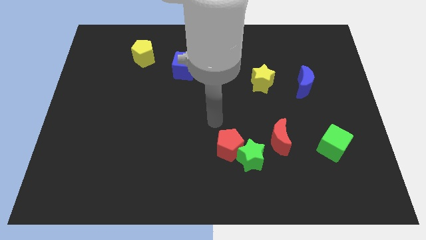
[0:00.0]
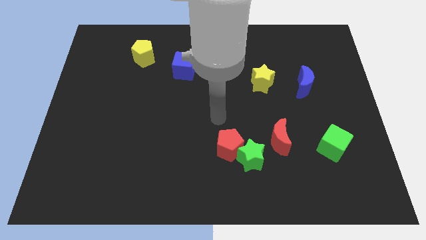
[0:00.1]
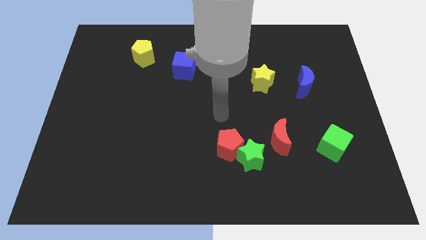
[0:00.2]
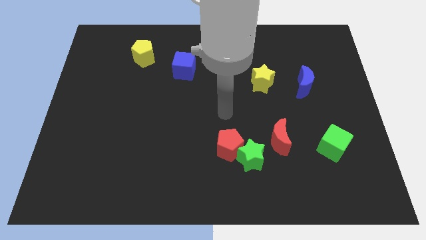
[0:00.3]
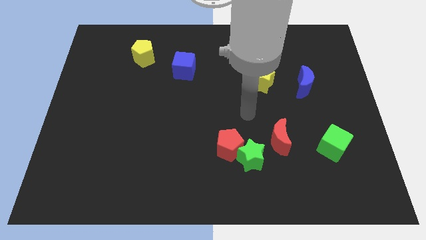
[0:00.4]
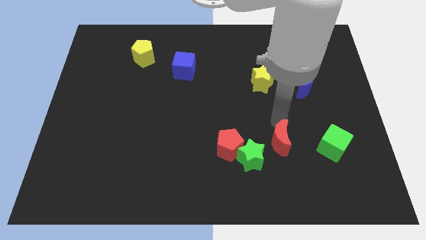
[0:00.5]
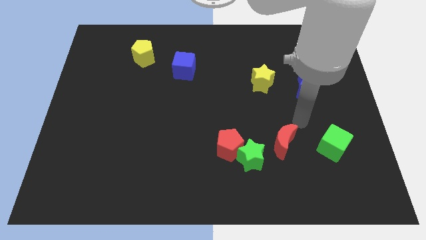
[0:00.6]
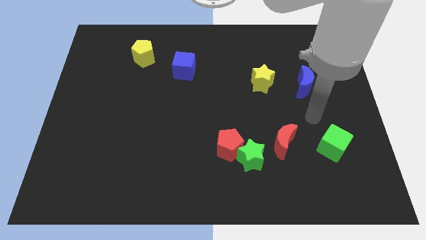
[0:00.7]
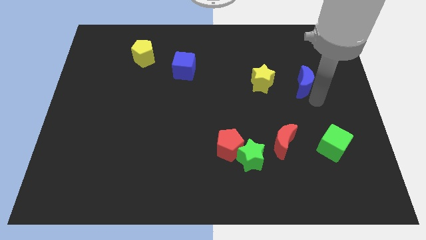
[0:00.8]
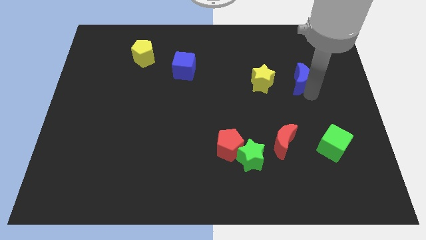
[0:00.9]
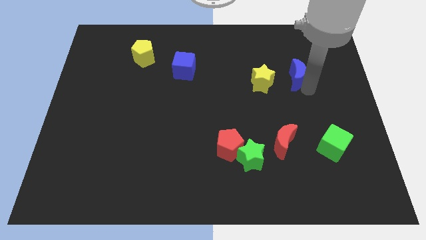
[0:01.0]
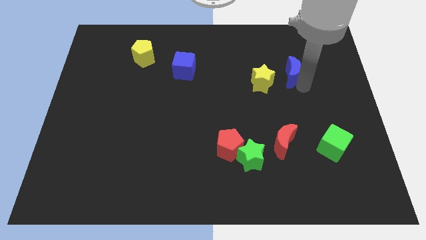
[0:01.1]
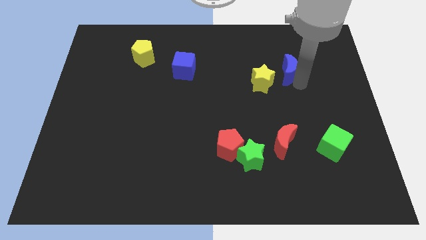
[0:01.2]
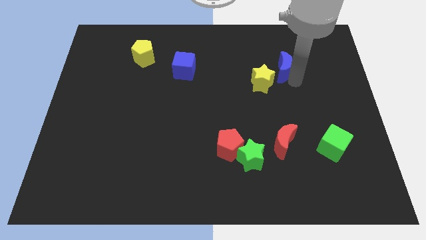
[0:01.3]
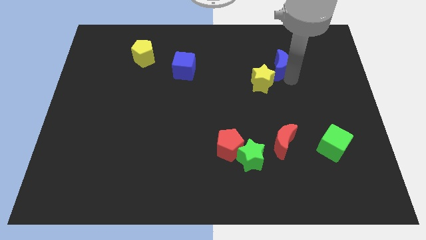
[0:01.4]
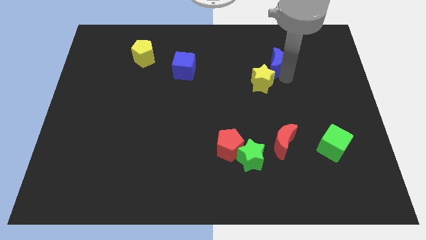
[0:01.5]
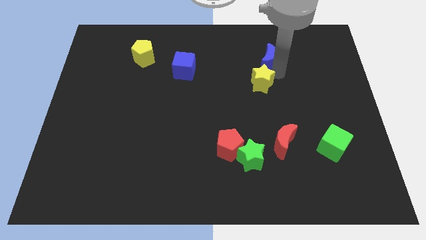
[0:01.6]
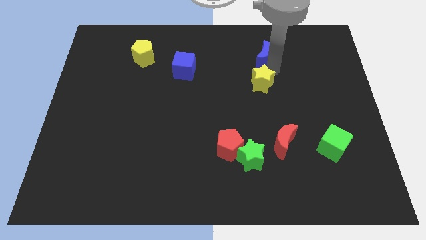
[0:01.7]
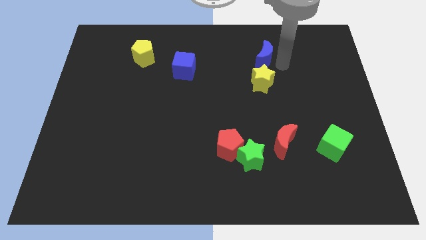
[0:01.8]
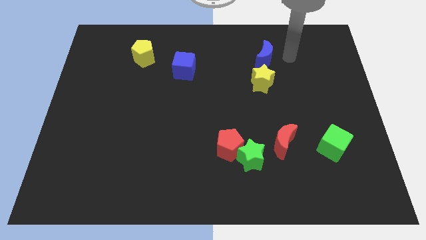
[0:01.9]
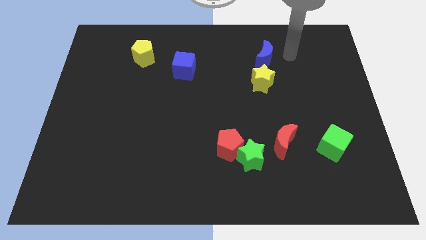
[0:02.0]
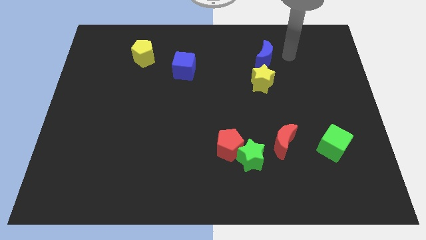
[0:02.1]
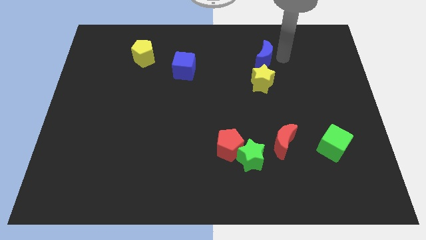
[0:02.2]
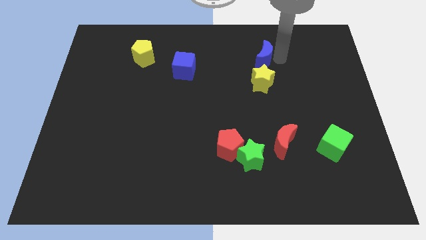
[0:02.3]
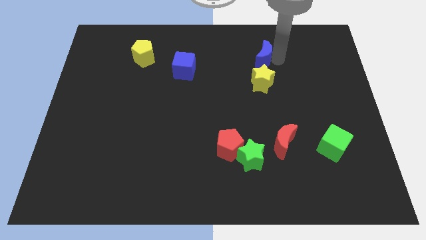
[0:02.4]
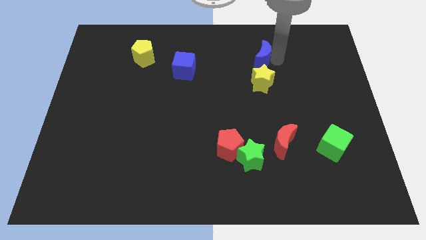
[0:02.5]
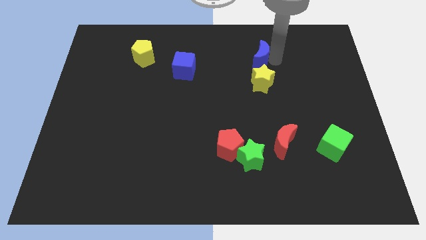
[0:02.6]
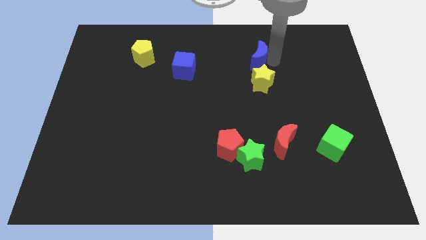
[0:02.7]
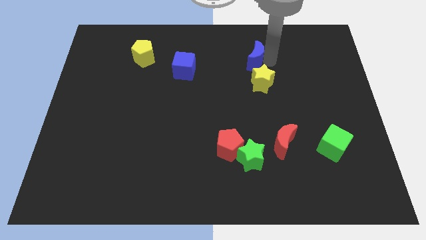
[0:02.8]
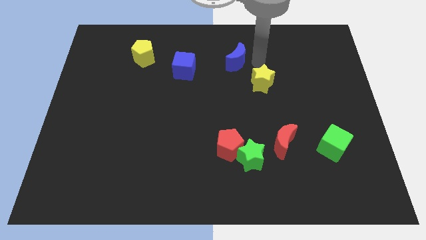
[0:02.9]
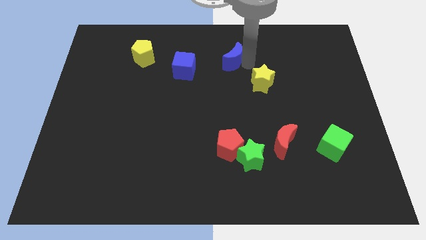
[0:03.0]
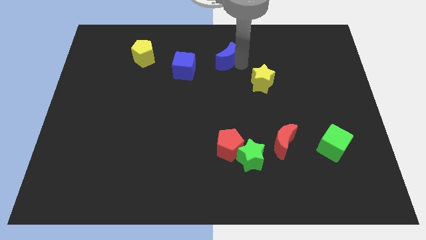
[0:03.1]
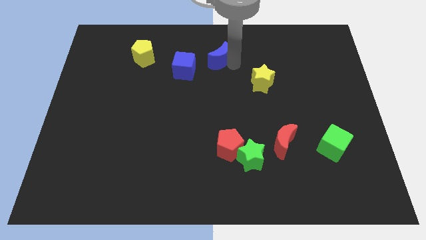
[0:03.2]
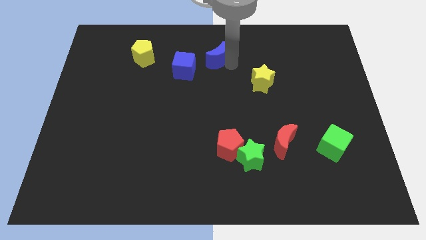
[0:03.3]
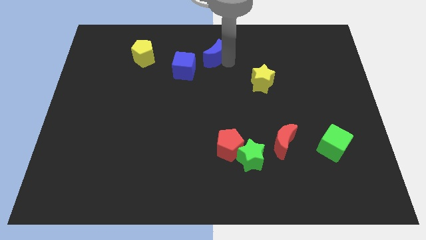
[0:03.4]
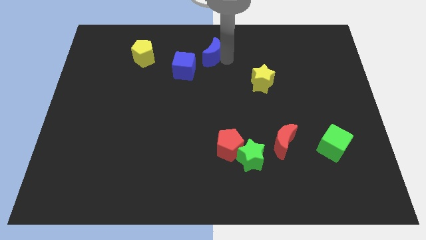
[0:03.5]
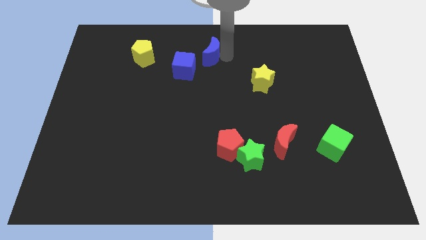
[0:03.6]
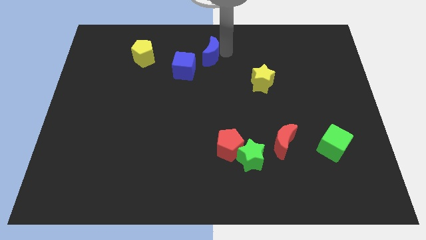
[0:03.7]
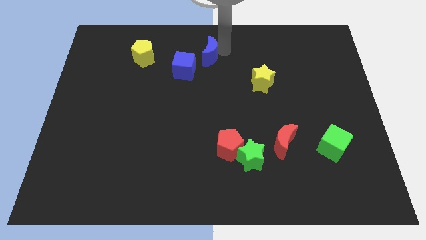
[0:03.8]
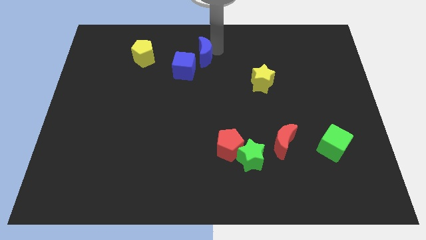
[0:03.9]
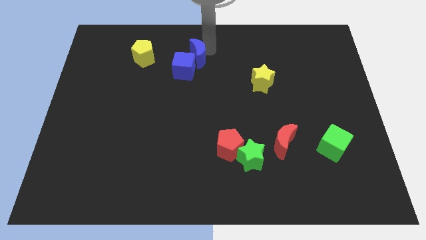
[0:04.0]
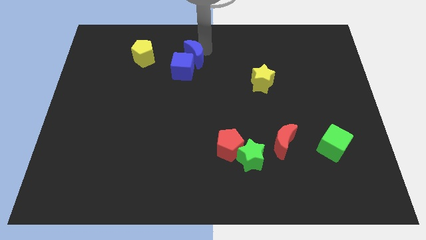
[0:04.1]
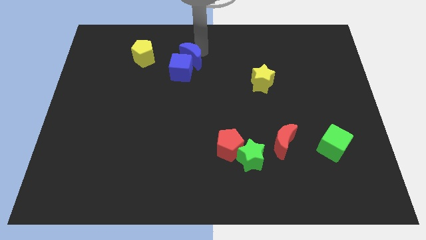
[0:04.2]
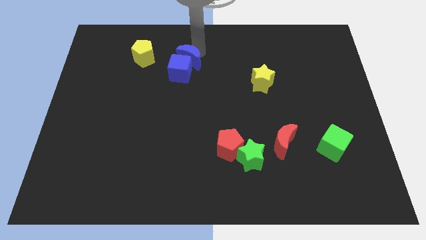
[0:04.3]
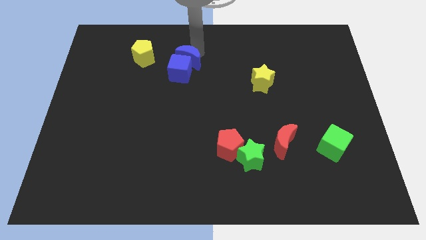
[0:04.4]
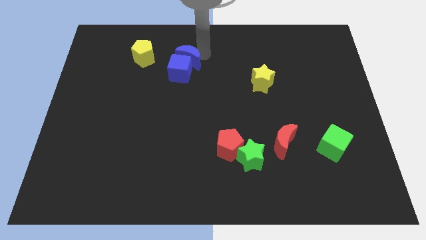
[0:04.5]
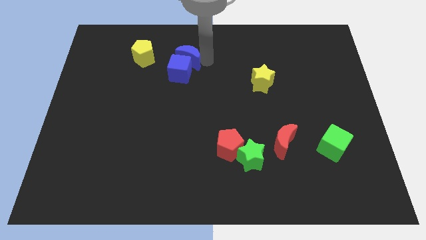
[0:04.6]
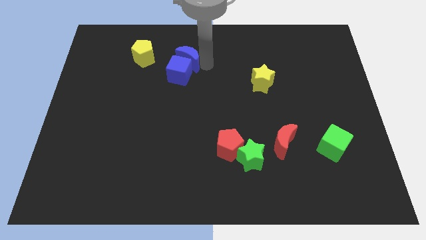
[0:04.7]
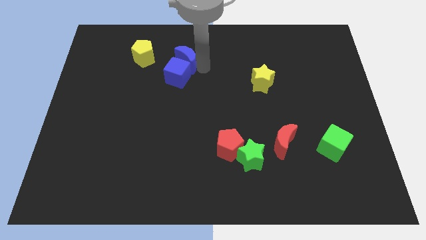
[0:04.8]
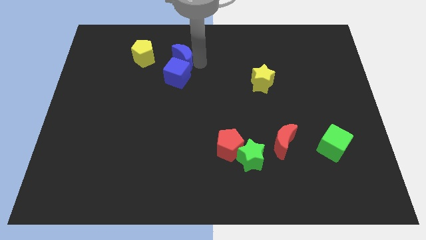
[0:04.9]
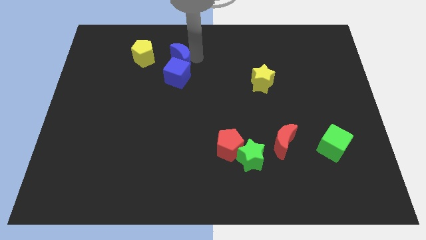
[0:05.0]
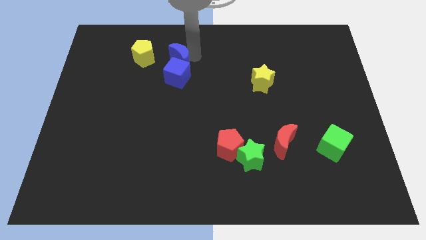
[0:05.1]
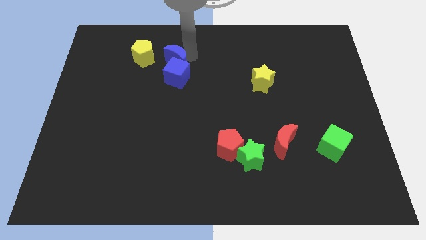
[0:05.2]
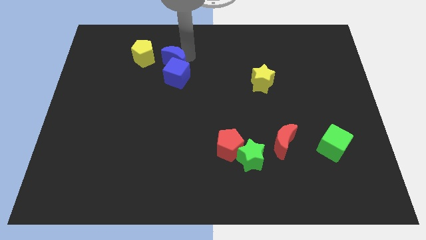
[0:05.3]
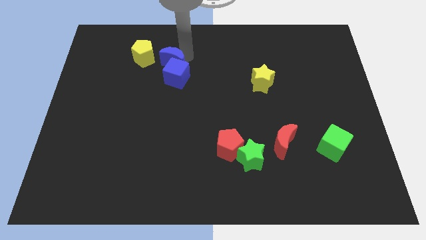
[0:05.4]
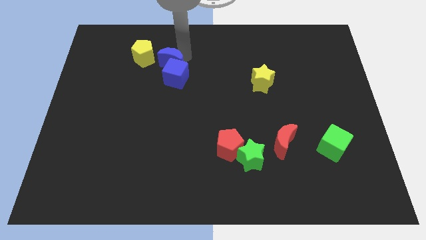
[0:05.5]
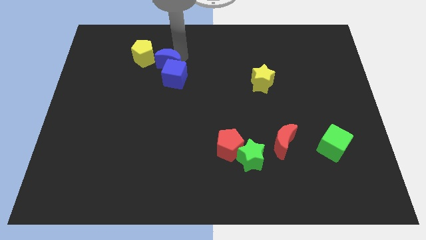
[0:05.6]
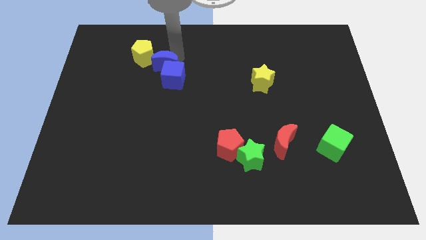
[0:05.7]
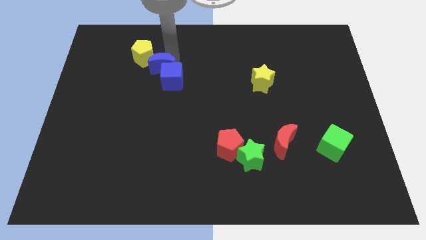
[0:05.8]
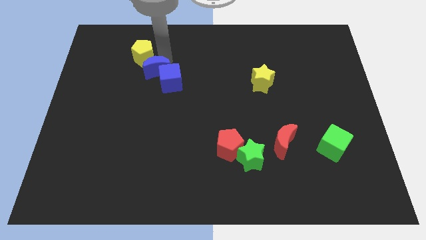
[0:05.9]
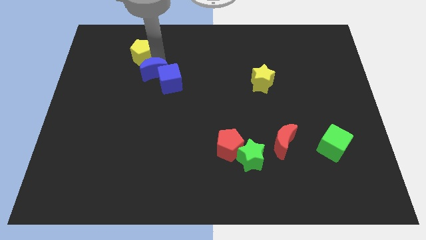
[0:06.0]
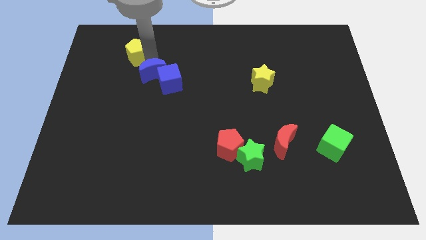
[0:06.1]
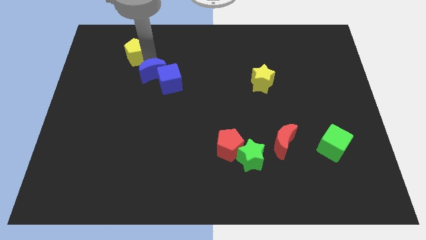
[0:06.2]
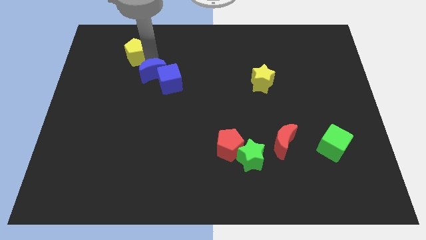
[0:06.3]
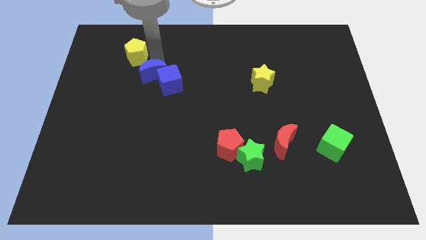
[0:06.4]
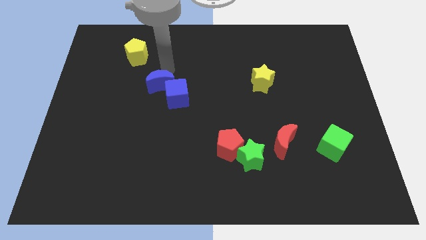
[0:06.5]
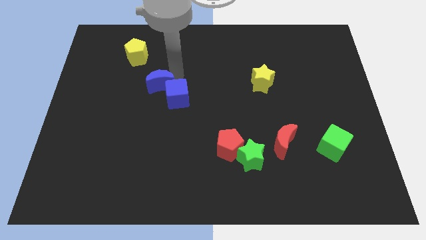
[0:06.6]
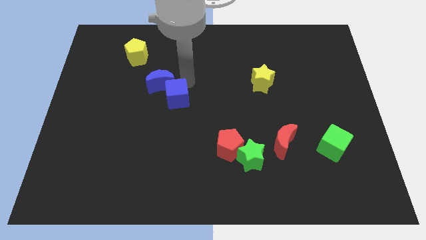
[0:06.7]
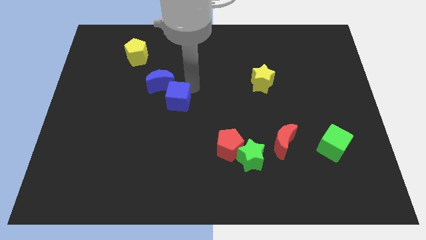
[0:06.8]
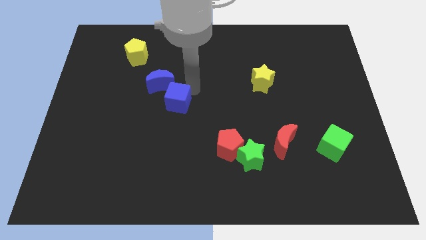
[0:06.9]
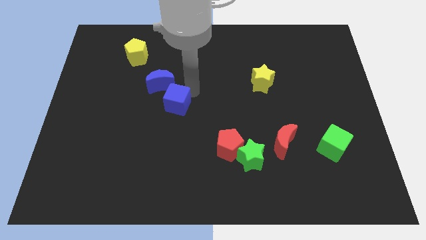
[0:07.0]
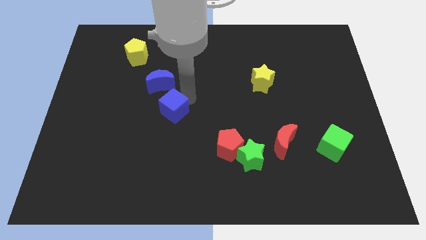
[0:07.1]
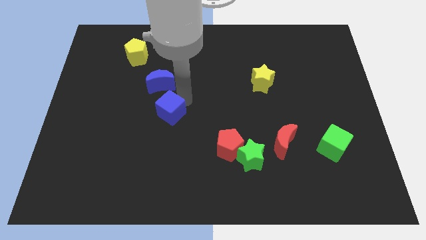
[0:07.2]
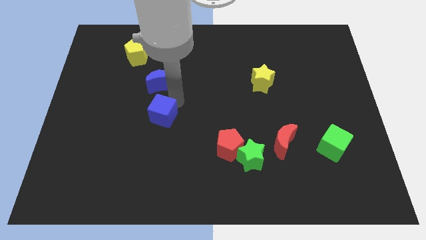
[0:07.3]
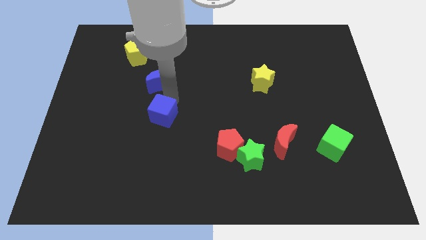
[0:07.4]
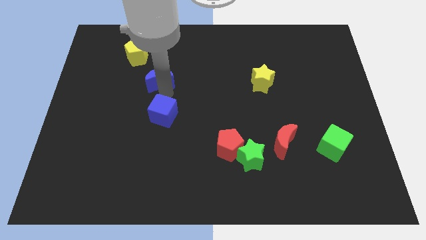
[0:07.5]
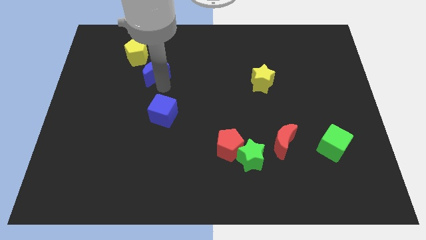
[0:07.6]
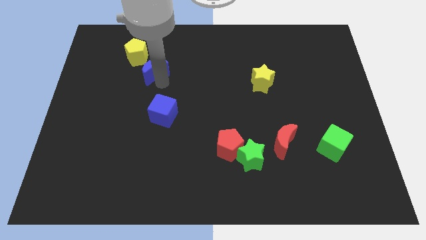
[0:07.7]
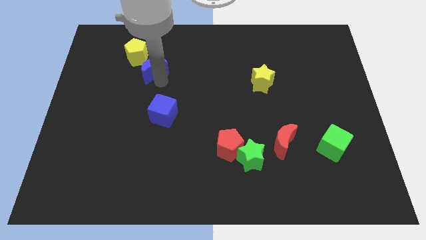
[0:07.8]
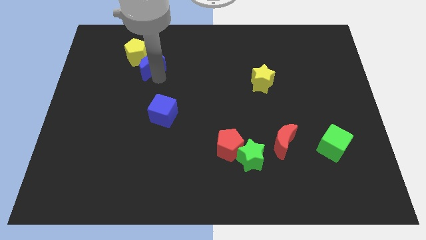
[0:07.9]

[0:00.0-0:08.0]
put the blue moon close to the yellow pentagon

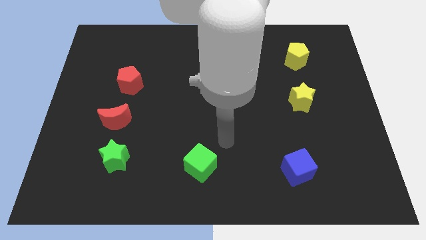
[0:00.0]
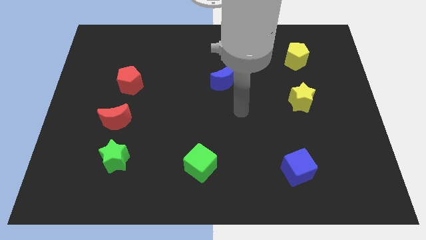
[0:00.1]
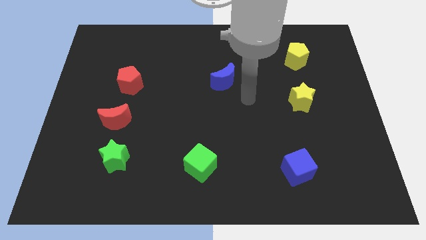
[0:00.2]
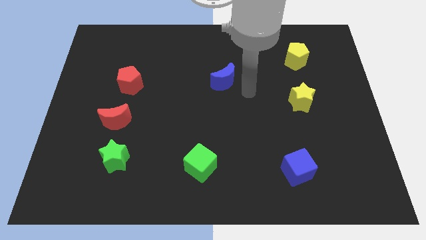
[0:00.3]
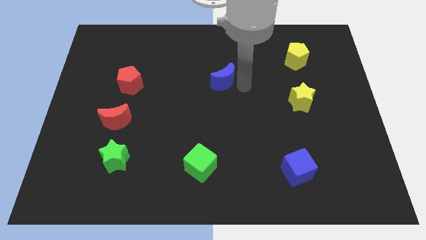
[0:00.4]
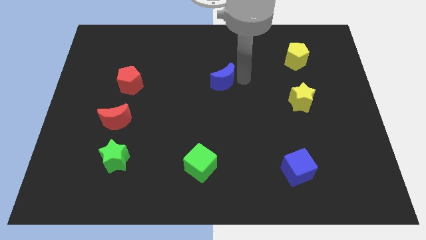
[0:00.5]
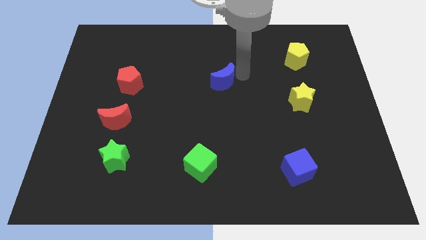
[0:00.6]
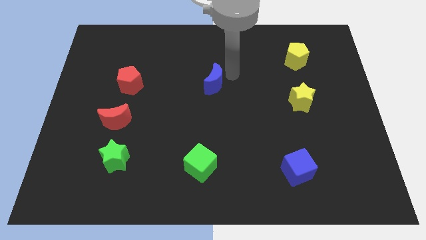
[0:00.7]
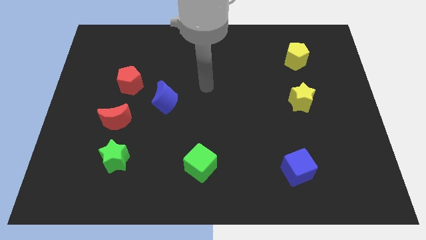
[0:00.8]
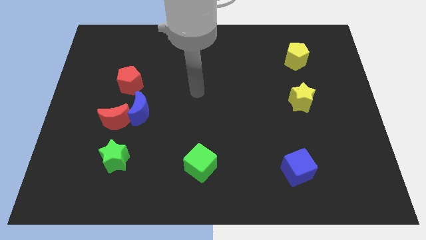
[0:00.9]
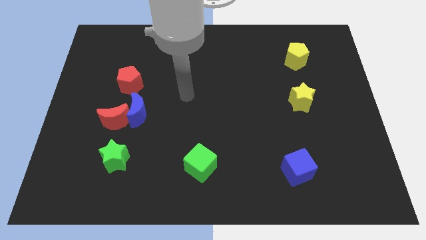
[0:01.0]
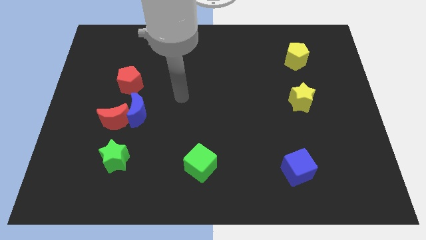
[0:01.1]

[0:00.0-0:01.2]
push the red moon towards the blue moon
